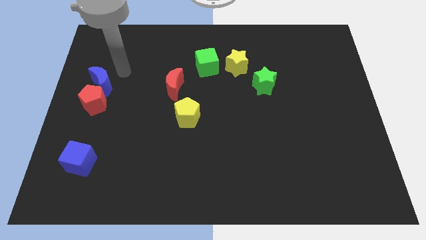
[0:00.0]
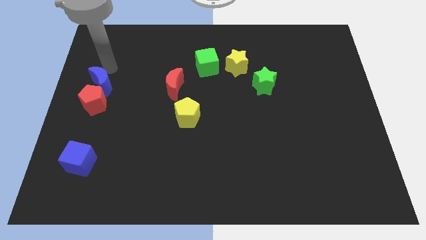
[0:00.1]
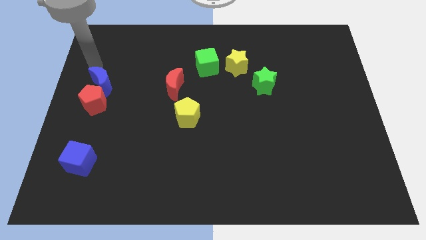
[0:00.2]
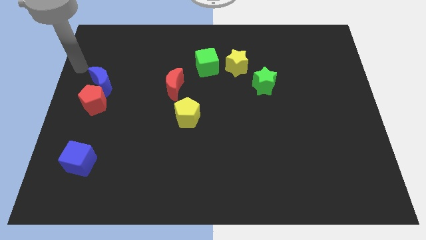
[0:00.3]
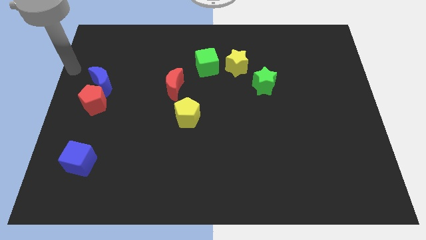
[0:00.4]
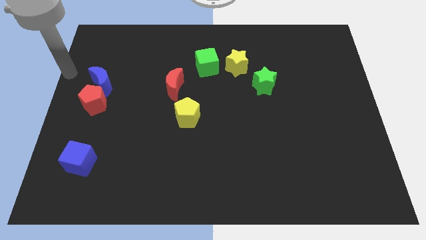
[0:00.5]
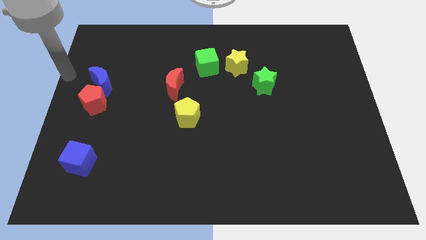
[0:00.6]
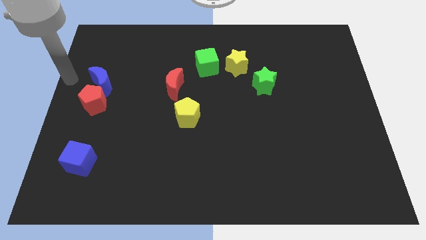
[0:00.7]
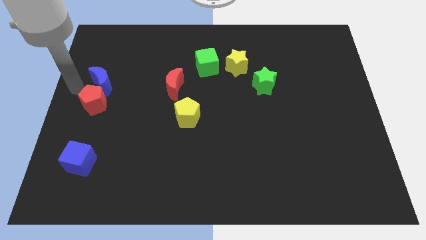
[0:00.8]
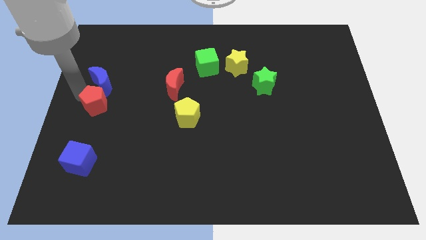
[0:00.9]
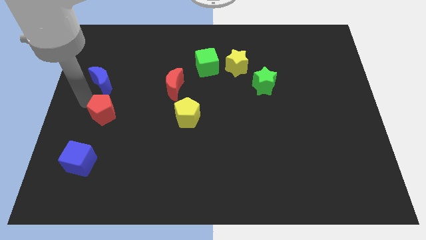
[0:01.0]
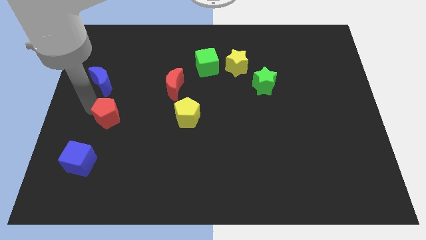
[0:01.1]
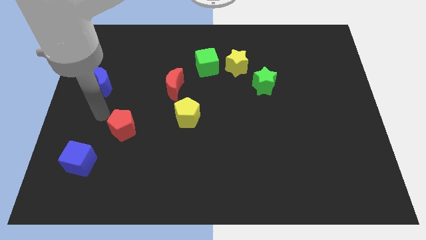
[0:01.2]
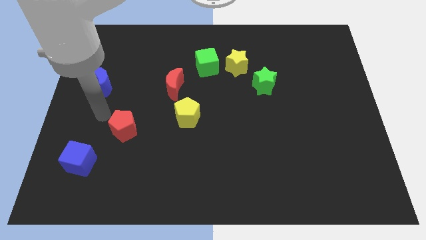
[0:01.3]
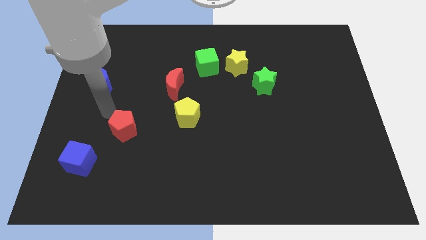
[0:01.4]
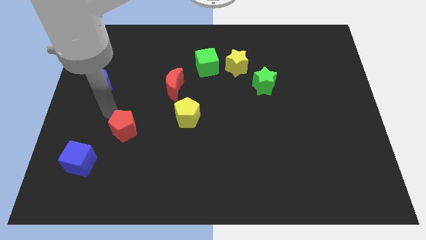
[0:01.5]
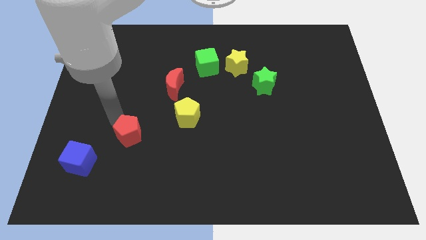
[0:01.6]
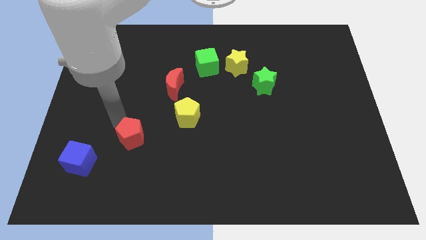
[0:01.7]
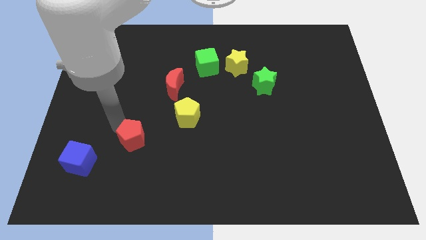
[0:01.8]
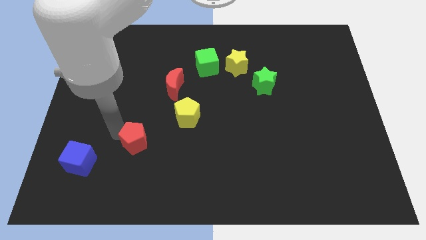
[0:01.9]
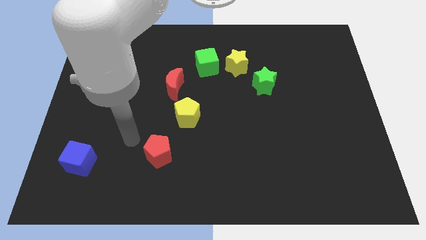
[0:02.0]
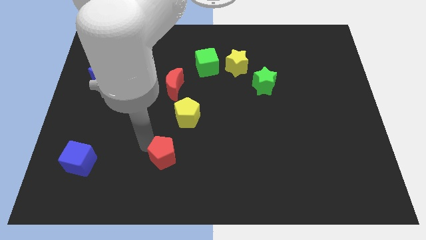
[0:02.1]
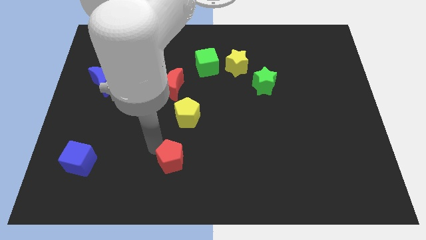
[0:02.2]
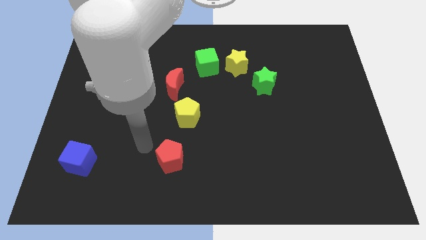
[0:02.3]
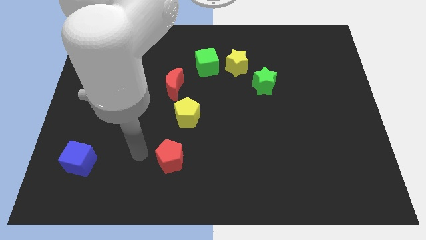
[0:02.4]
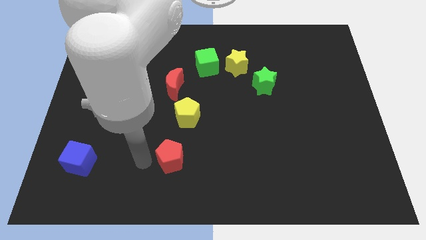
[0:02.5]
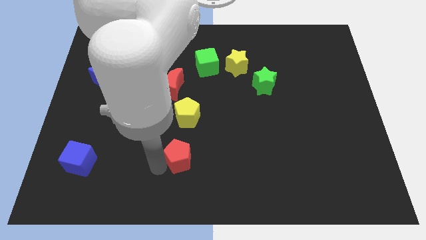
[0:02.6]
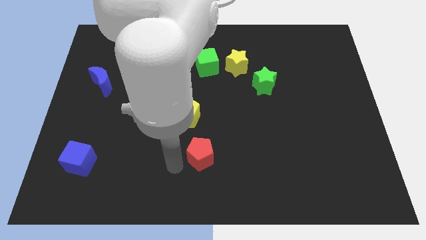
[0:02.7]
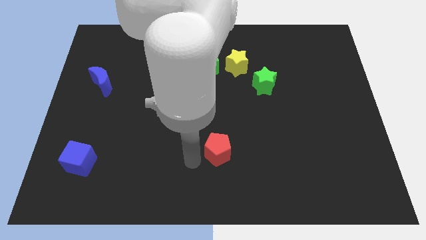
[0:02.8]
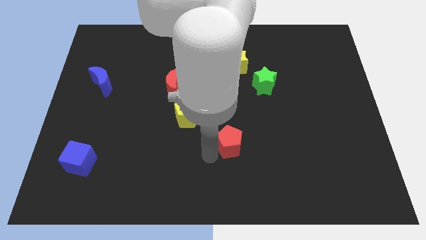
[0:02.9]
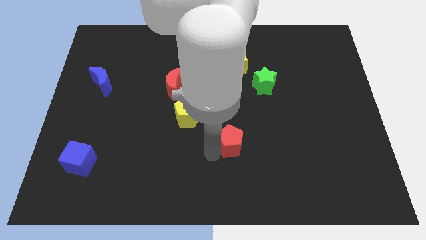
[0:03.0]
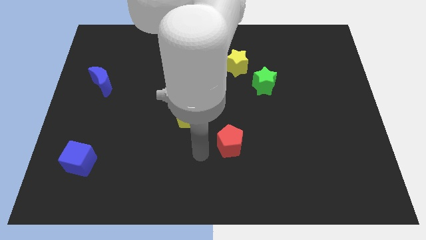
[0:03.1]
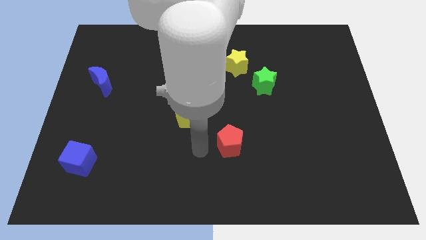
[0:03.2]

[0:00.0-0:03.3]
push the red pentagon vertically at the bottom side of the yellow star

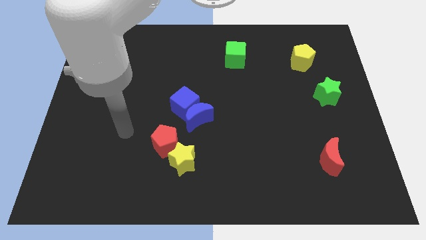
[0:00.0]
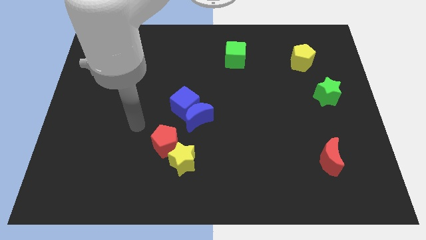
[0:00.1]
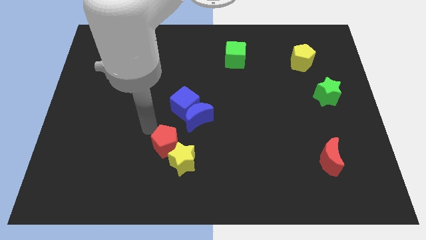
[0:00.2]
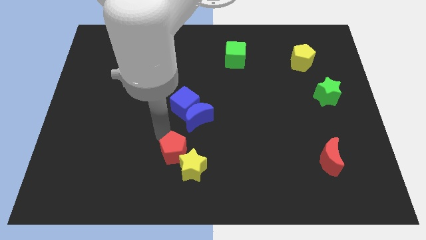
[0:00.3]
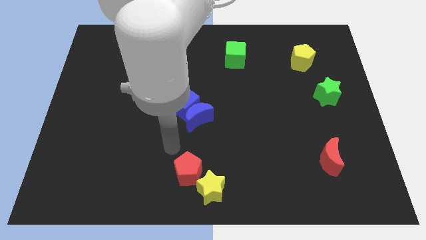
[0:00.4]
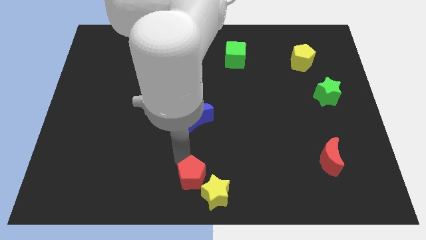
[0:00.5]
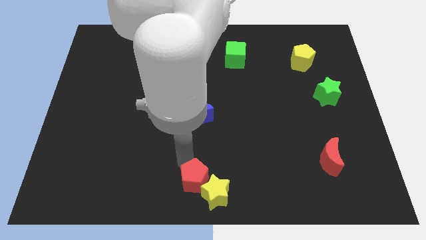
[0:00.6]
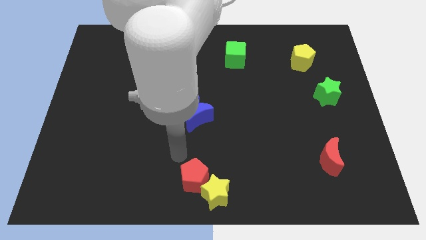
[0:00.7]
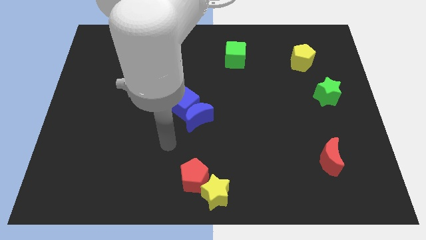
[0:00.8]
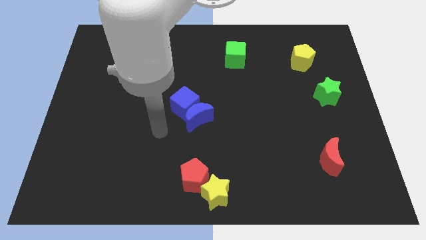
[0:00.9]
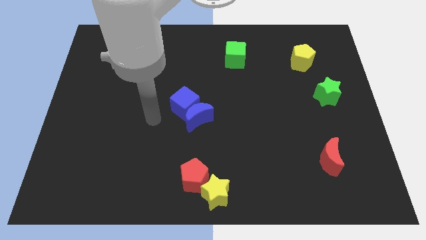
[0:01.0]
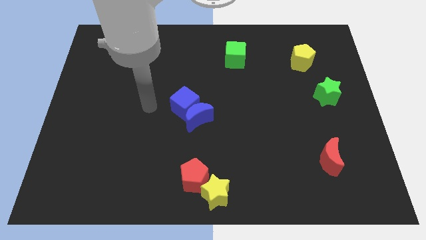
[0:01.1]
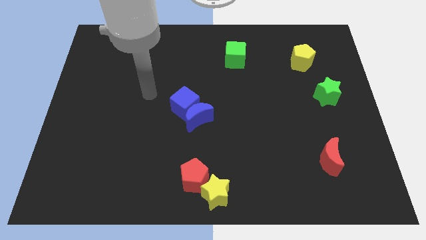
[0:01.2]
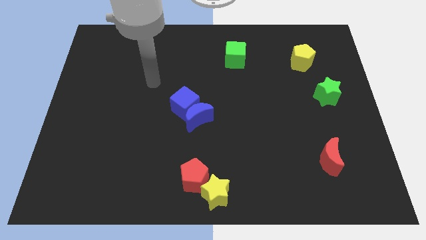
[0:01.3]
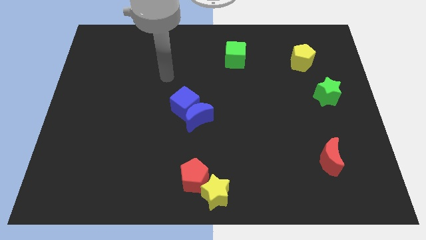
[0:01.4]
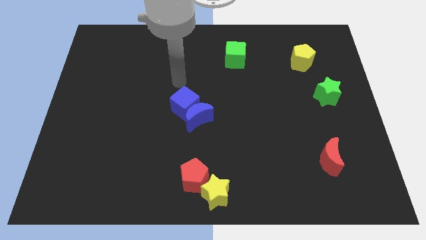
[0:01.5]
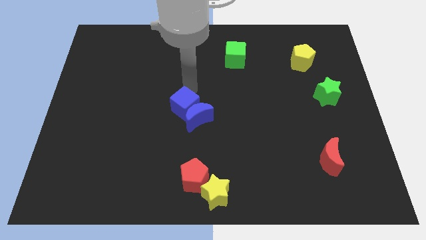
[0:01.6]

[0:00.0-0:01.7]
move the red pentagon and yellow star towards the bottom center

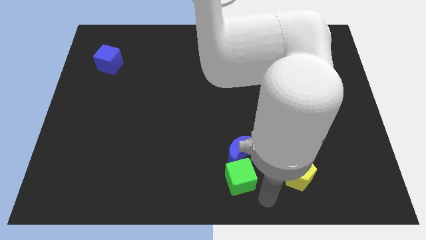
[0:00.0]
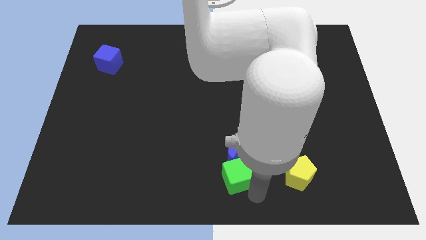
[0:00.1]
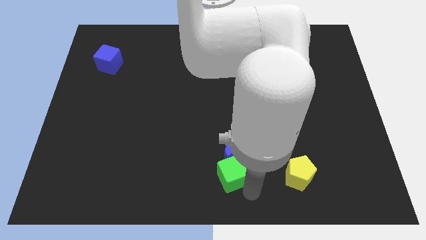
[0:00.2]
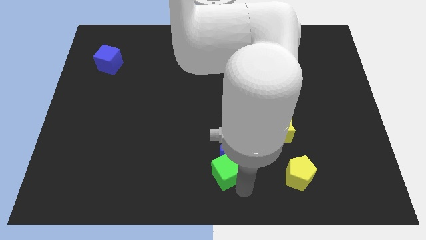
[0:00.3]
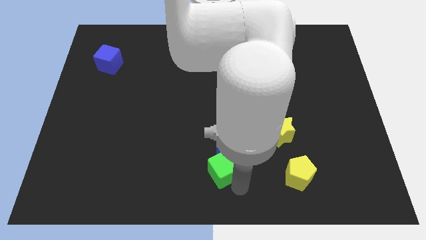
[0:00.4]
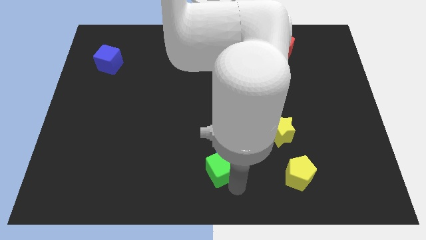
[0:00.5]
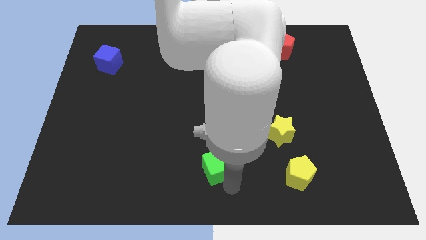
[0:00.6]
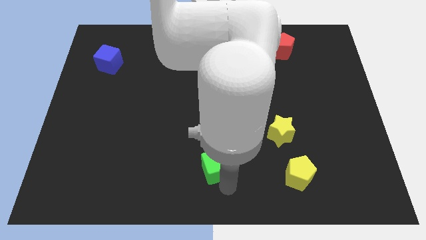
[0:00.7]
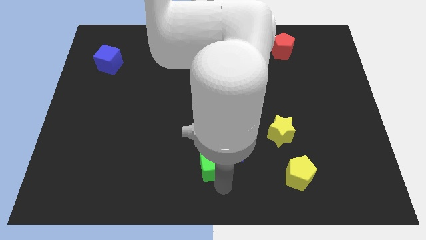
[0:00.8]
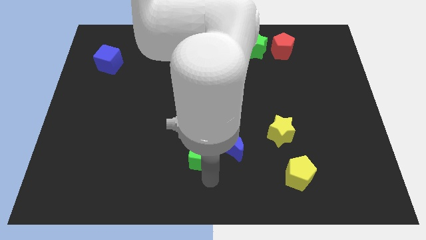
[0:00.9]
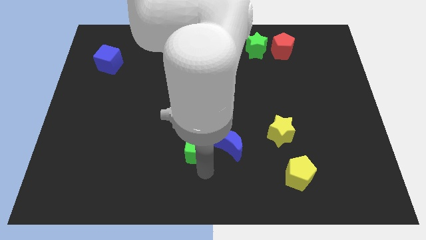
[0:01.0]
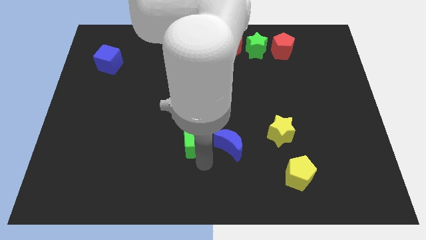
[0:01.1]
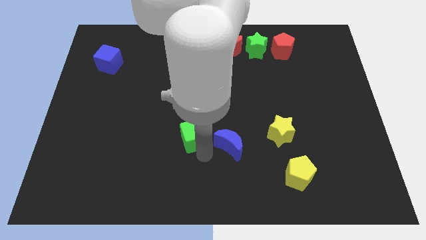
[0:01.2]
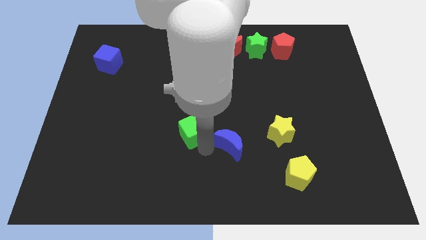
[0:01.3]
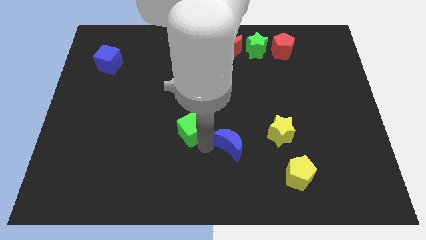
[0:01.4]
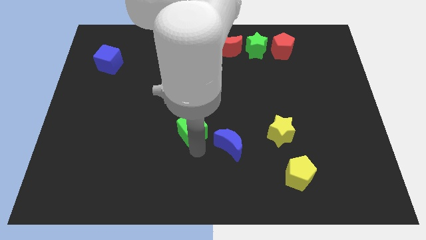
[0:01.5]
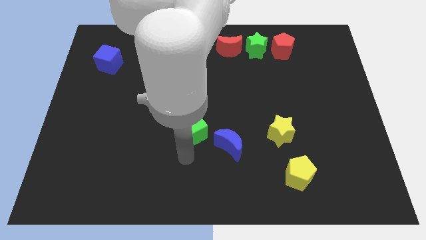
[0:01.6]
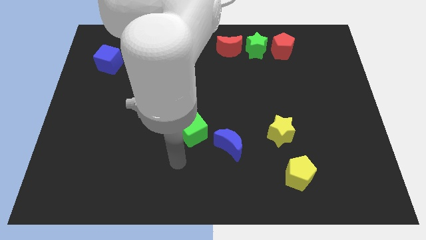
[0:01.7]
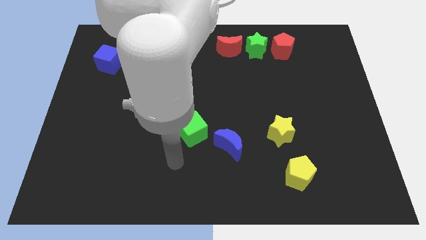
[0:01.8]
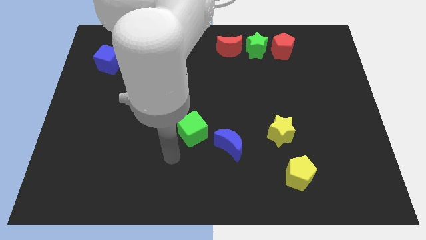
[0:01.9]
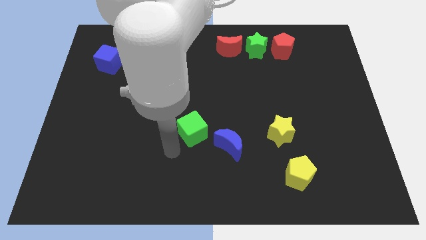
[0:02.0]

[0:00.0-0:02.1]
push green cube upwards

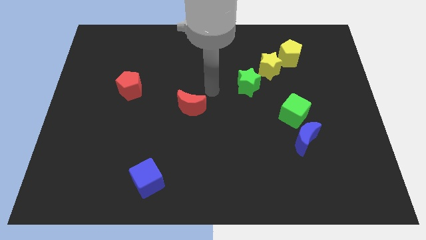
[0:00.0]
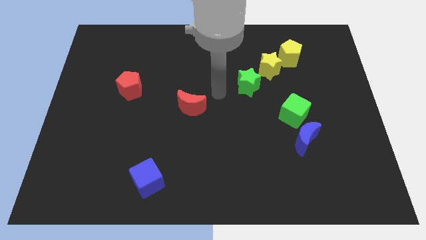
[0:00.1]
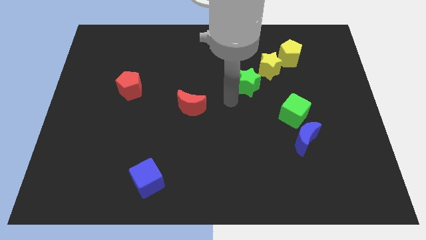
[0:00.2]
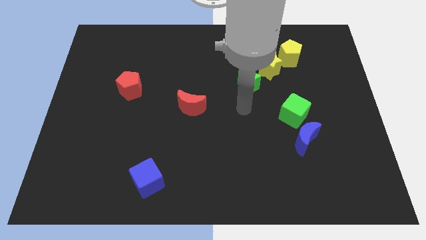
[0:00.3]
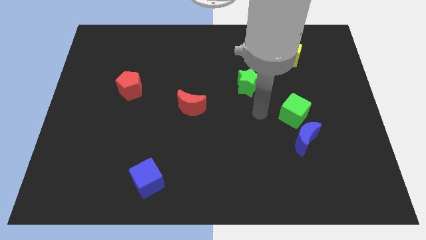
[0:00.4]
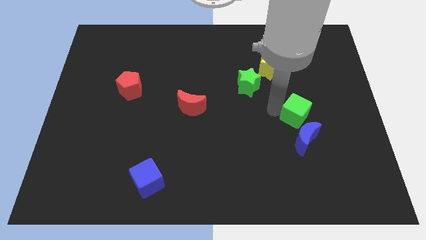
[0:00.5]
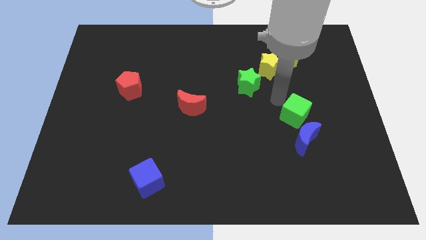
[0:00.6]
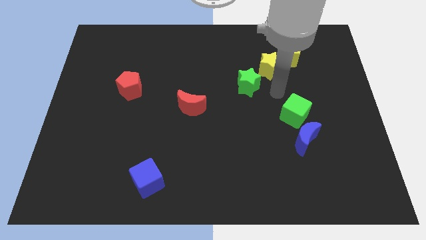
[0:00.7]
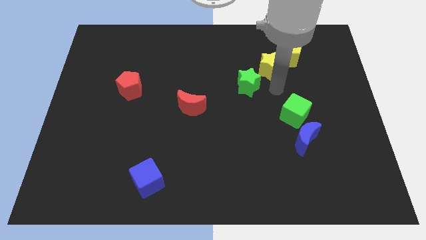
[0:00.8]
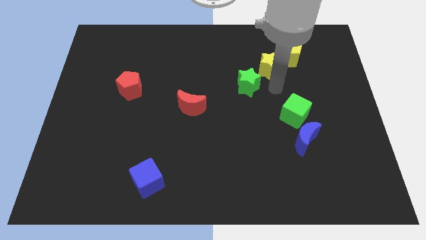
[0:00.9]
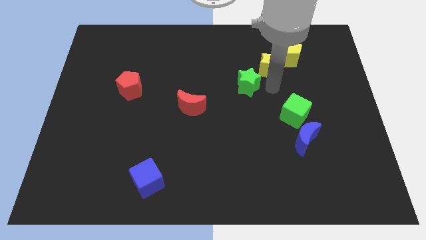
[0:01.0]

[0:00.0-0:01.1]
point your arm at the bottom of the yellow star

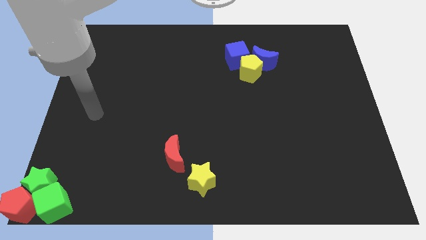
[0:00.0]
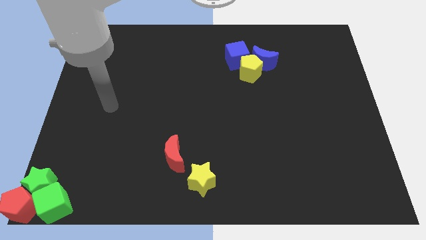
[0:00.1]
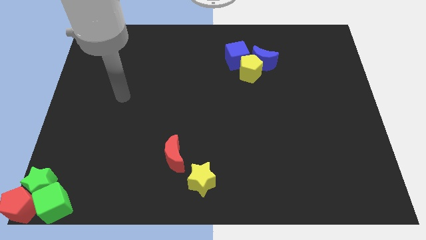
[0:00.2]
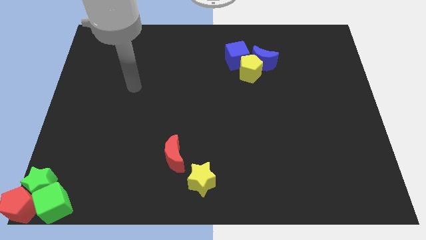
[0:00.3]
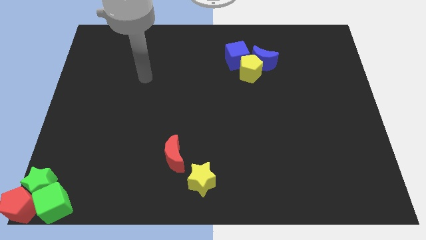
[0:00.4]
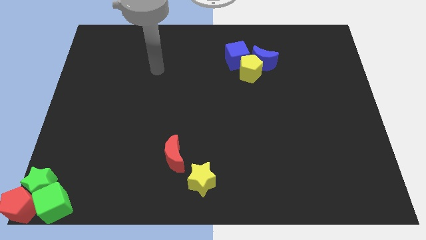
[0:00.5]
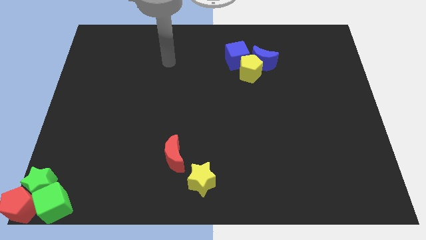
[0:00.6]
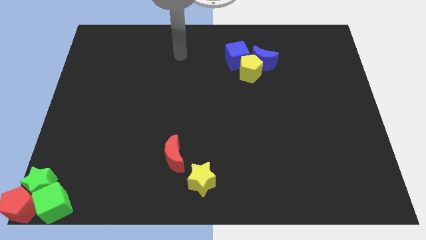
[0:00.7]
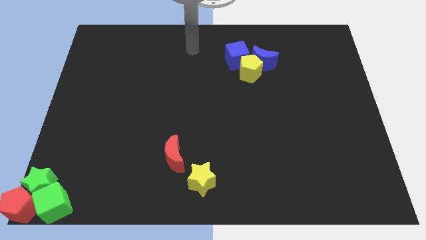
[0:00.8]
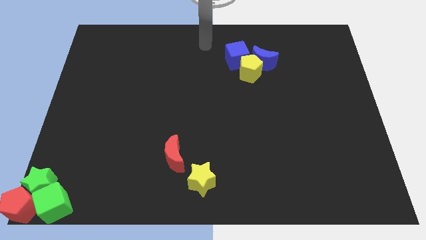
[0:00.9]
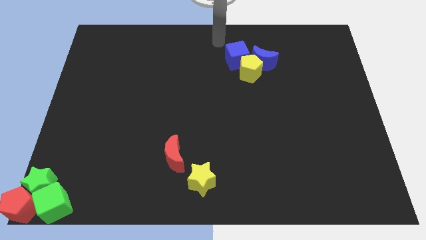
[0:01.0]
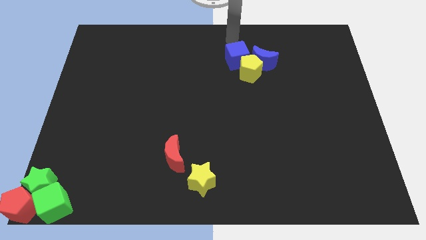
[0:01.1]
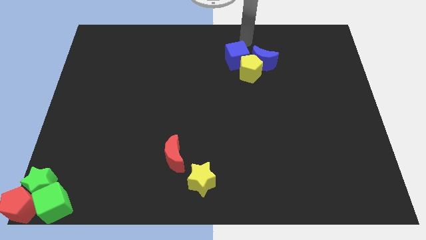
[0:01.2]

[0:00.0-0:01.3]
point your arm at the top of the blue cube
